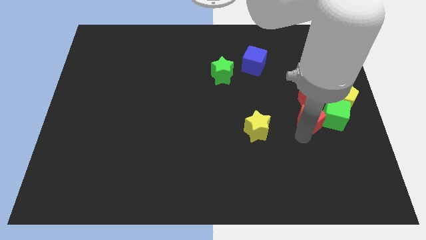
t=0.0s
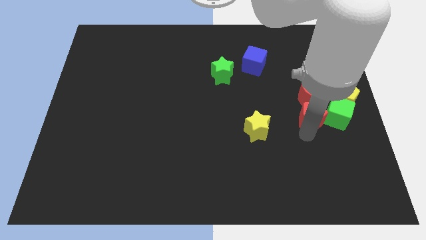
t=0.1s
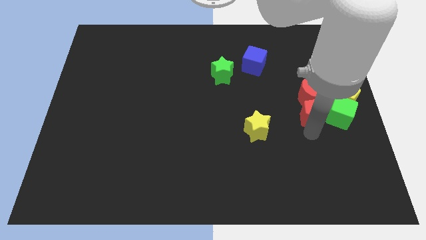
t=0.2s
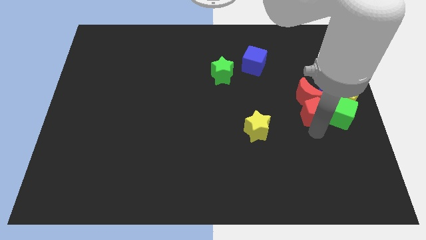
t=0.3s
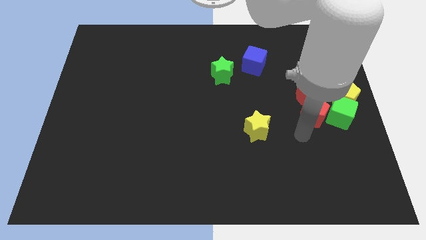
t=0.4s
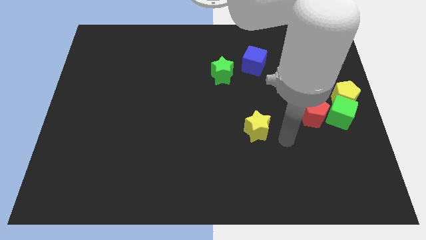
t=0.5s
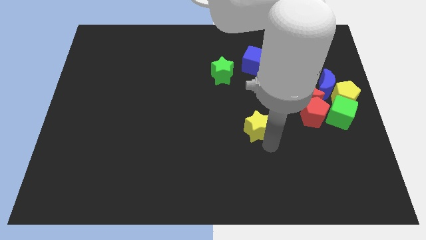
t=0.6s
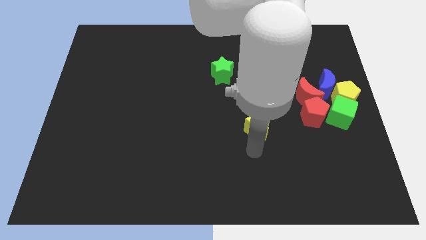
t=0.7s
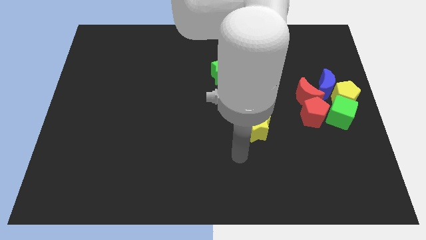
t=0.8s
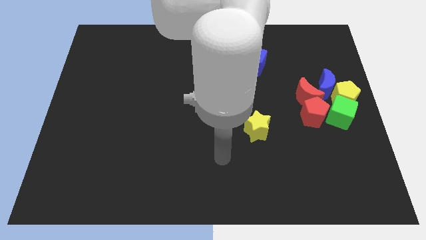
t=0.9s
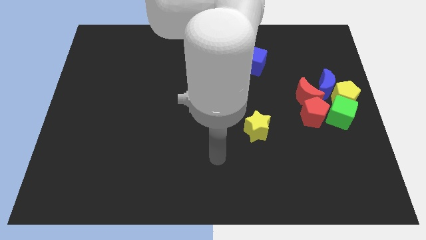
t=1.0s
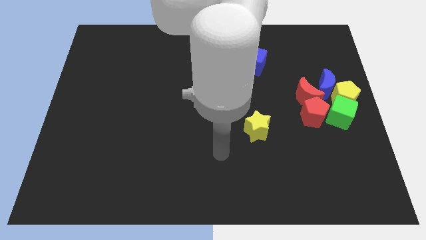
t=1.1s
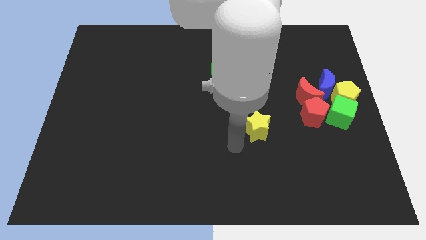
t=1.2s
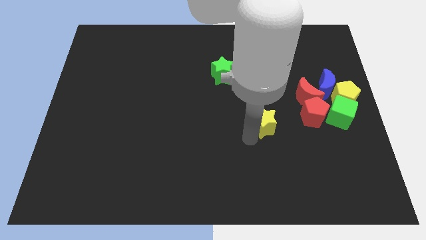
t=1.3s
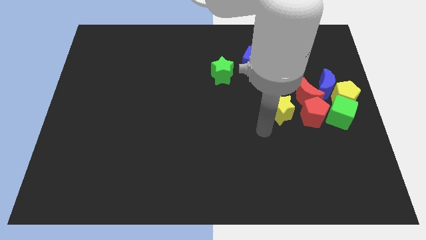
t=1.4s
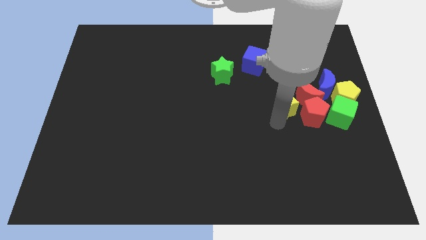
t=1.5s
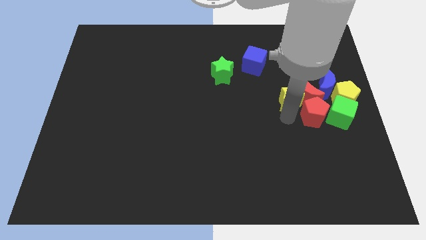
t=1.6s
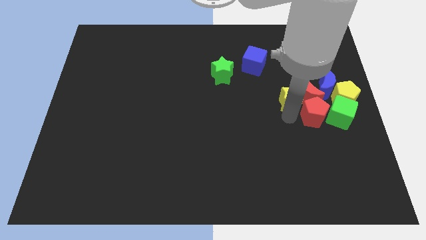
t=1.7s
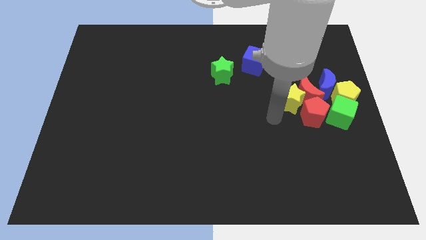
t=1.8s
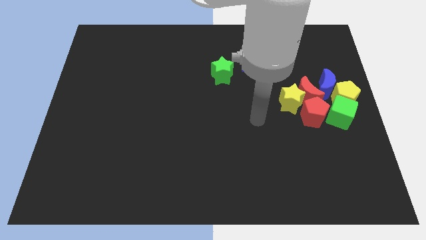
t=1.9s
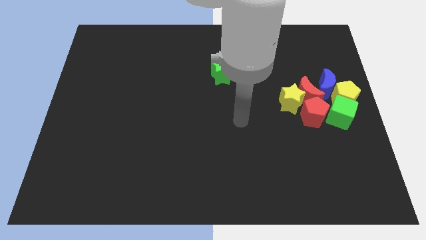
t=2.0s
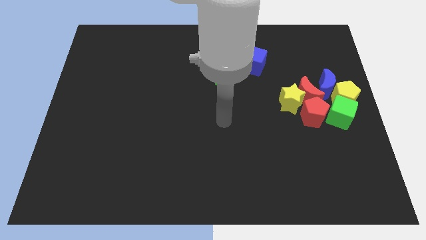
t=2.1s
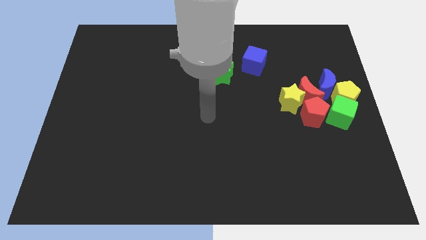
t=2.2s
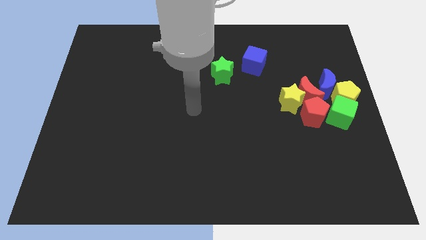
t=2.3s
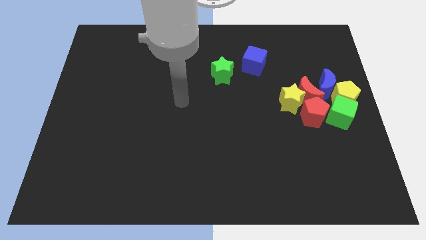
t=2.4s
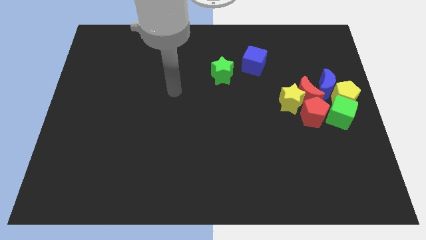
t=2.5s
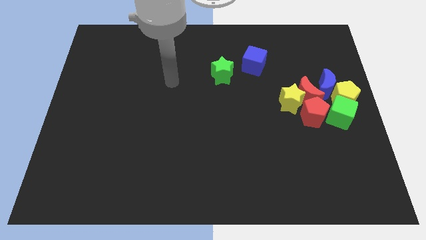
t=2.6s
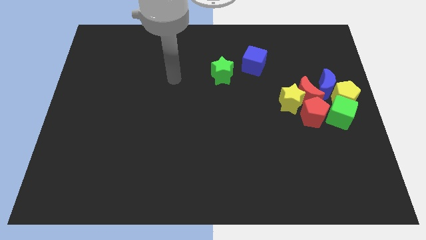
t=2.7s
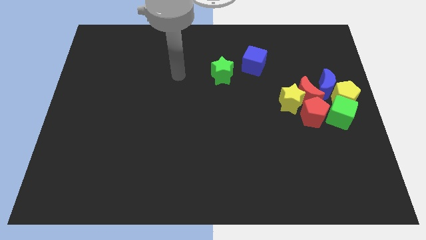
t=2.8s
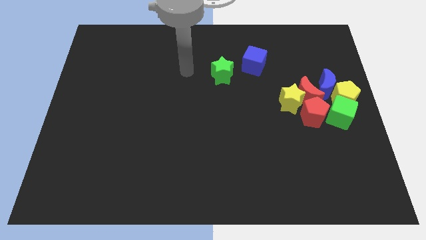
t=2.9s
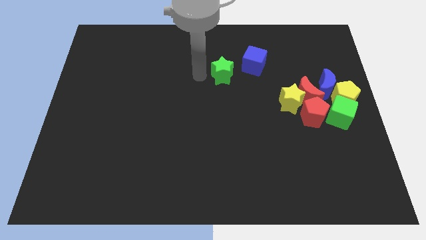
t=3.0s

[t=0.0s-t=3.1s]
push the yellow star into the red crescent

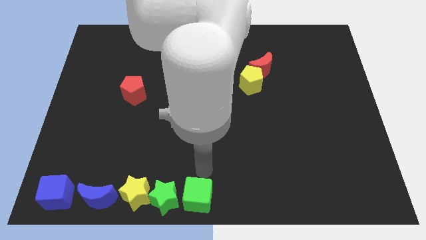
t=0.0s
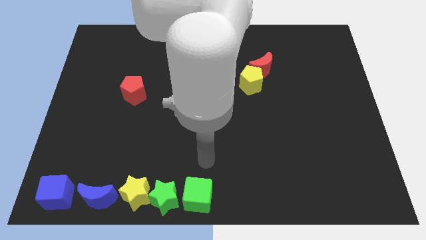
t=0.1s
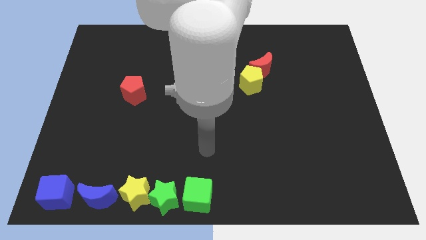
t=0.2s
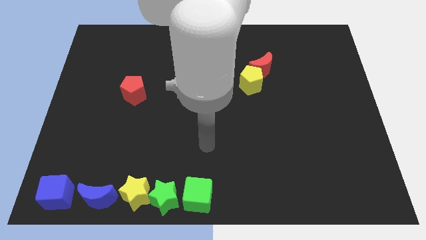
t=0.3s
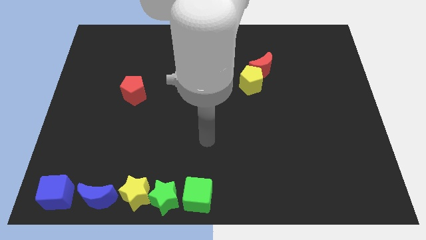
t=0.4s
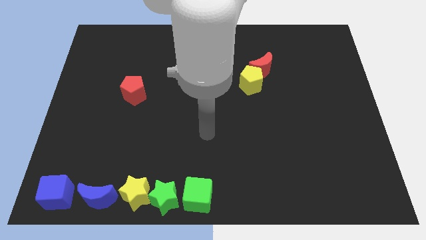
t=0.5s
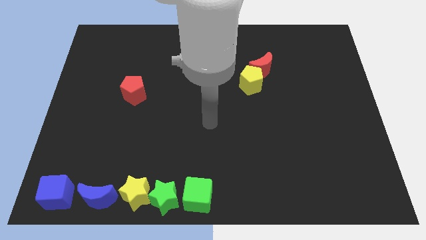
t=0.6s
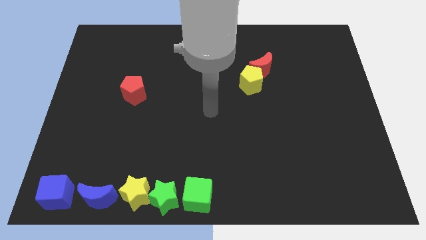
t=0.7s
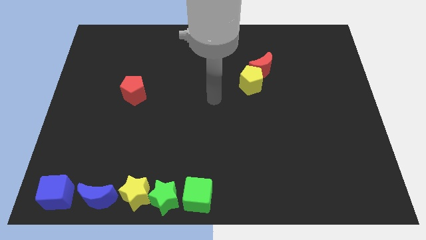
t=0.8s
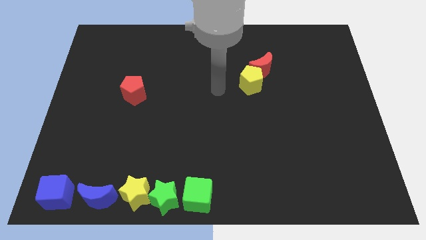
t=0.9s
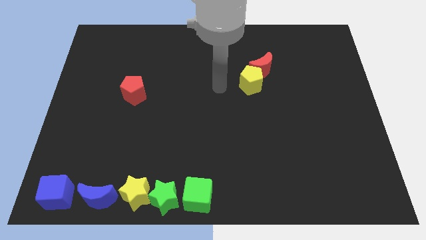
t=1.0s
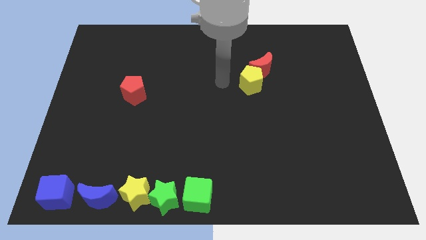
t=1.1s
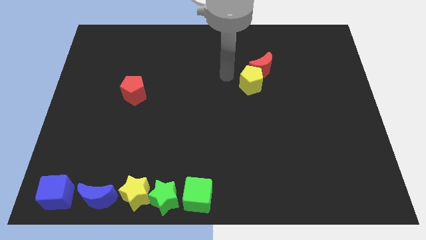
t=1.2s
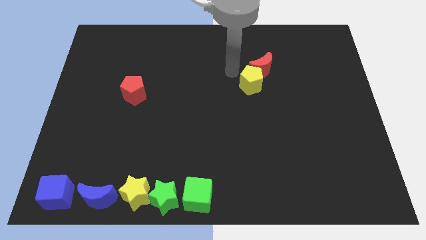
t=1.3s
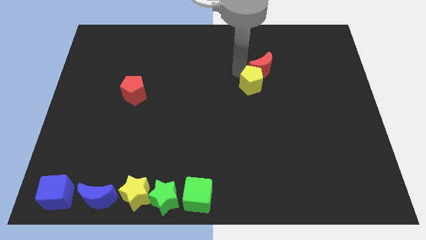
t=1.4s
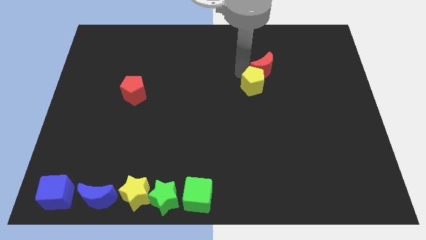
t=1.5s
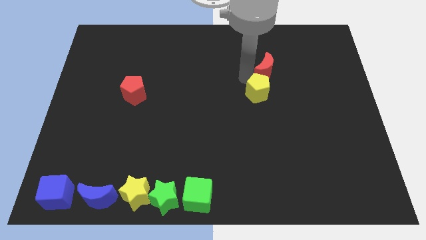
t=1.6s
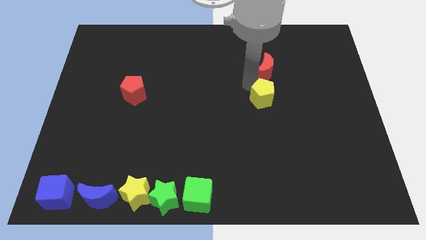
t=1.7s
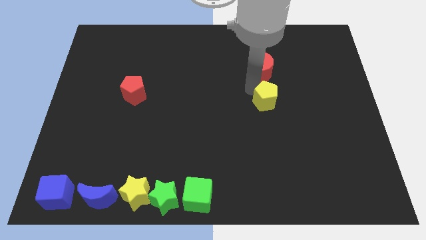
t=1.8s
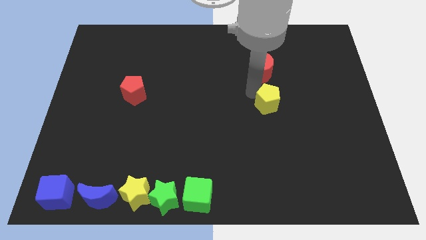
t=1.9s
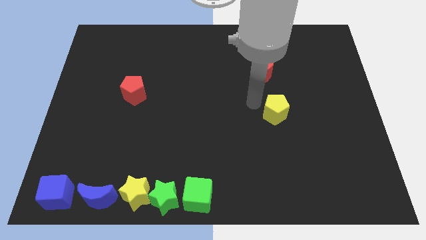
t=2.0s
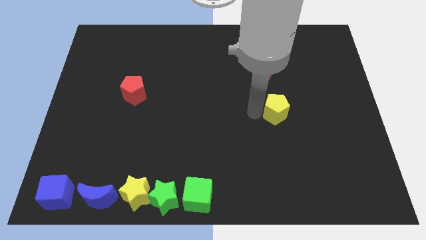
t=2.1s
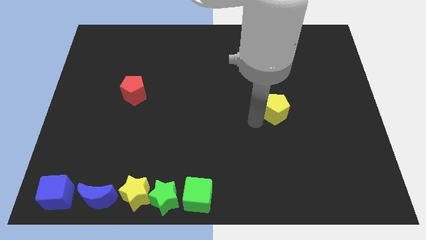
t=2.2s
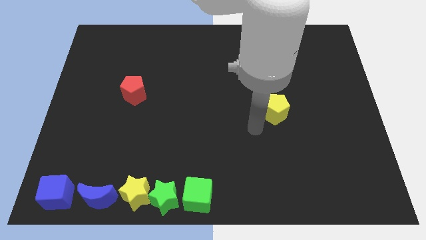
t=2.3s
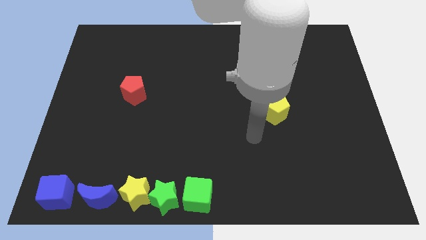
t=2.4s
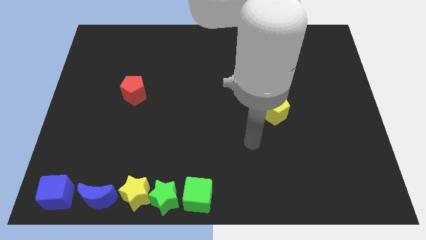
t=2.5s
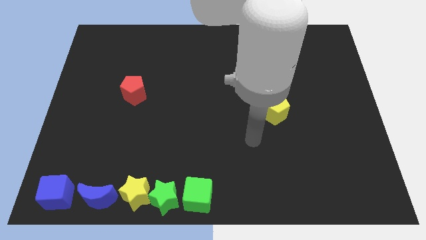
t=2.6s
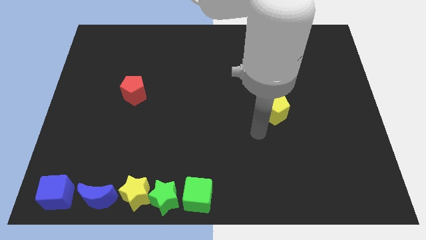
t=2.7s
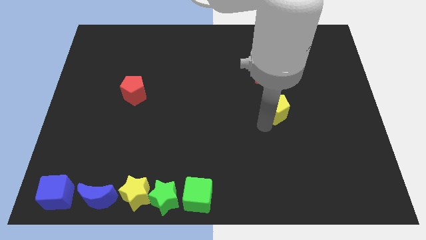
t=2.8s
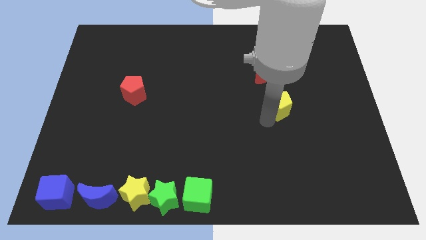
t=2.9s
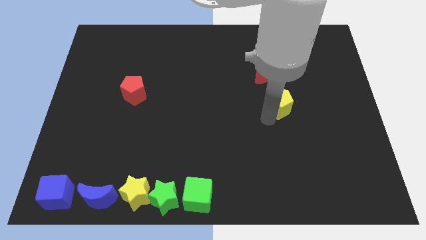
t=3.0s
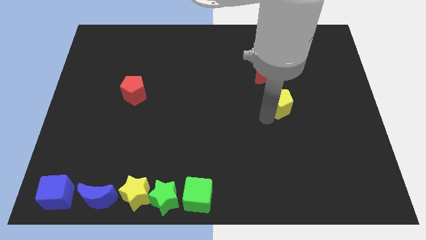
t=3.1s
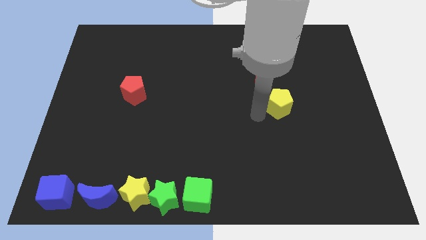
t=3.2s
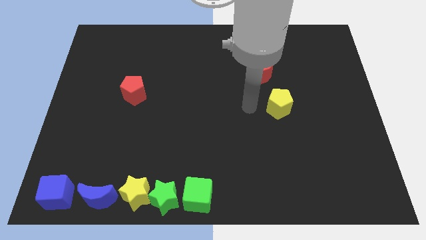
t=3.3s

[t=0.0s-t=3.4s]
separate the yellow pentagon from the red crescent

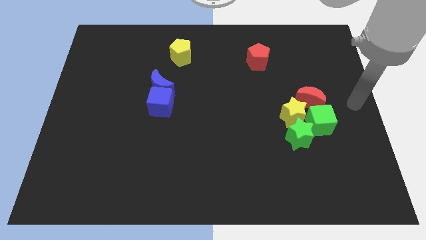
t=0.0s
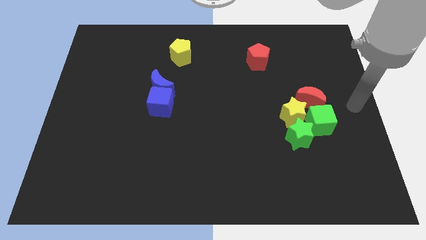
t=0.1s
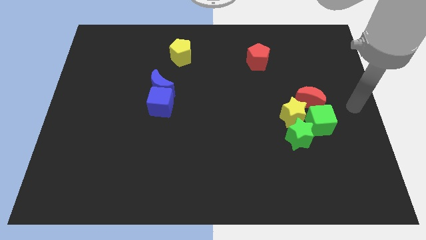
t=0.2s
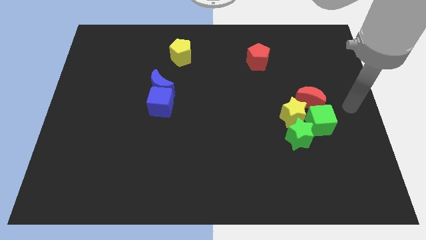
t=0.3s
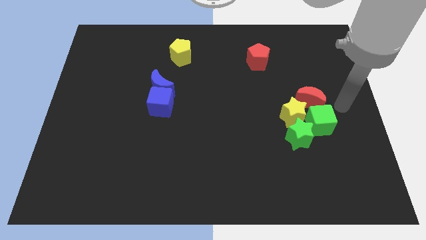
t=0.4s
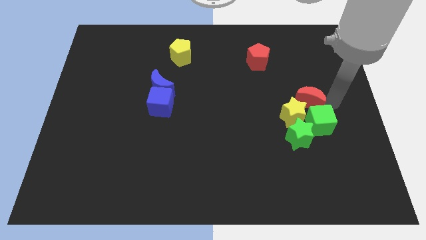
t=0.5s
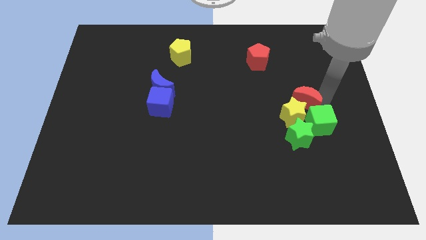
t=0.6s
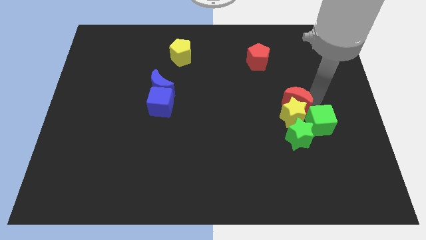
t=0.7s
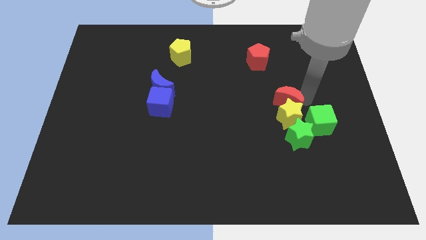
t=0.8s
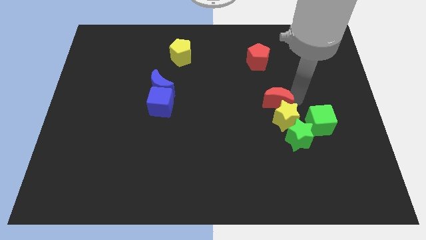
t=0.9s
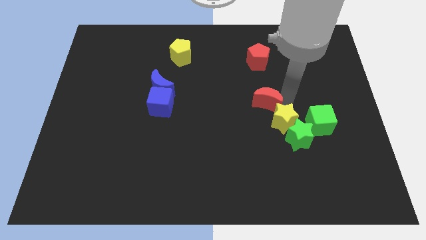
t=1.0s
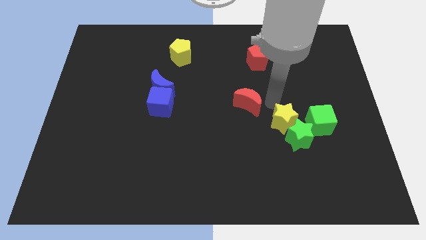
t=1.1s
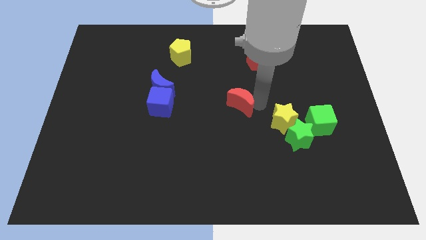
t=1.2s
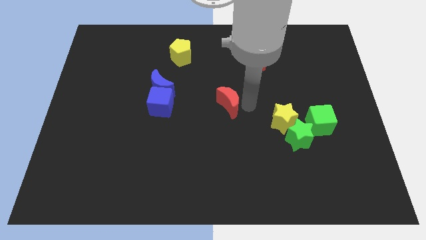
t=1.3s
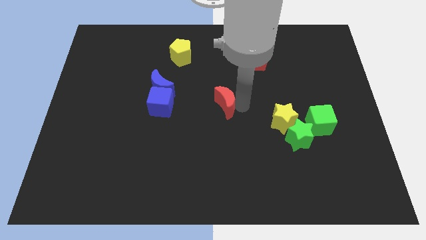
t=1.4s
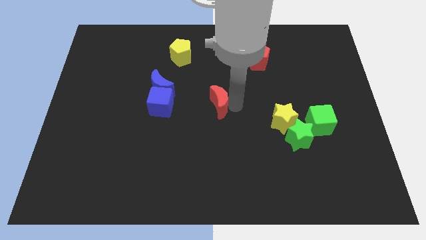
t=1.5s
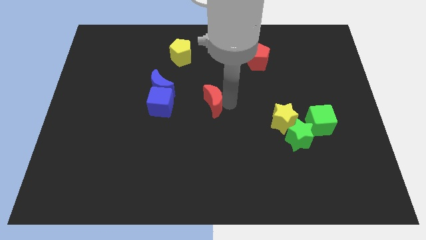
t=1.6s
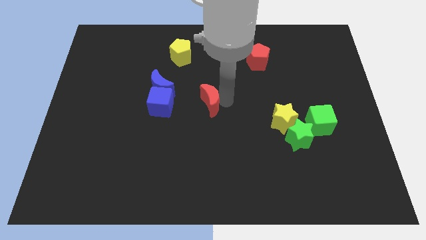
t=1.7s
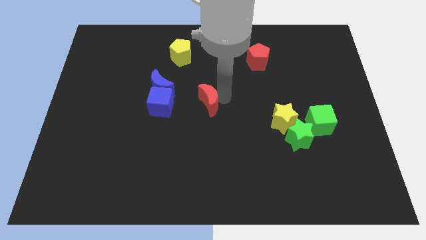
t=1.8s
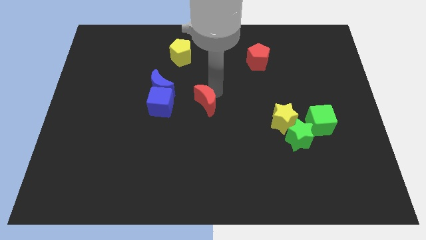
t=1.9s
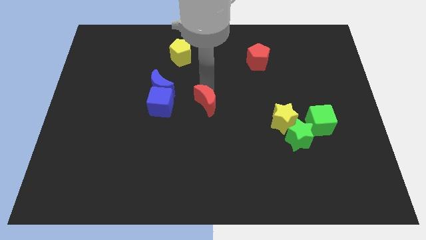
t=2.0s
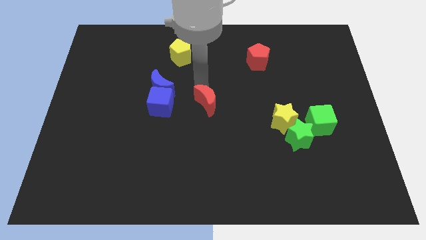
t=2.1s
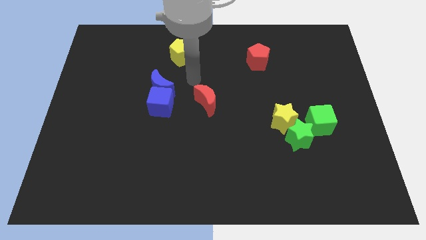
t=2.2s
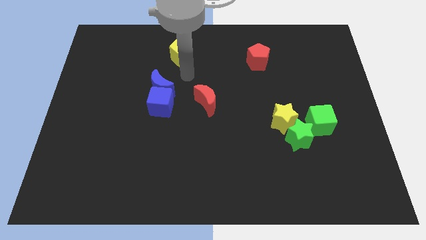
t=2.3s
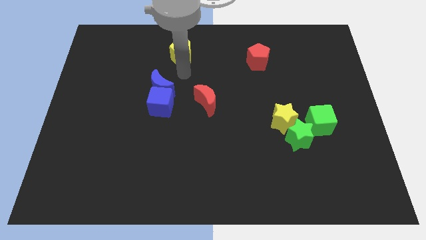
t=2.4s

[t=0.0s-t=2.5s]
put the red moon at the center of the board
